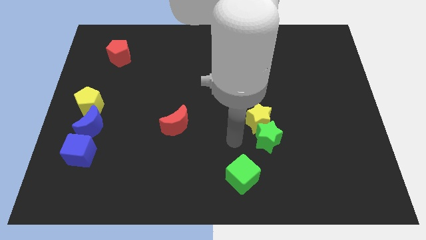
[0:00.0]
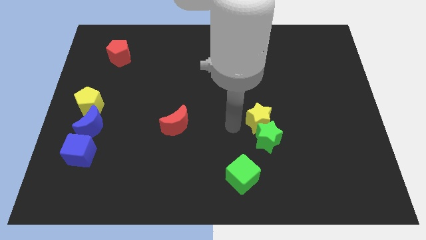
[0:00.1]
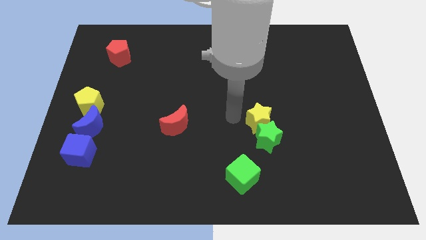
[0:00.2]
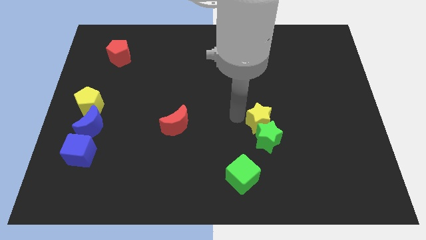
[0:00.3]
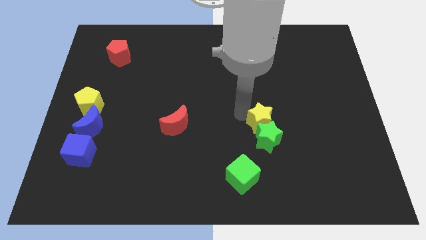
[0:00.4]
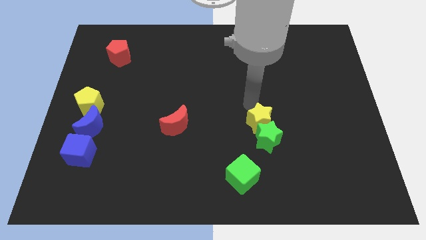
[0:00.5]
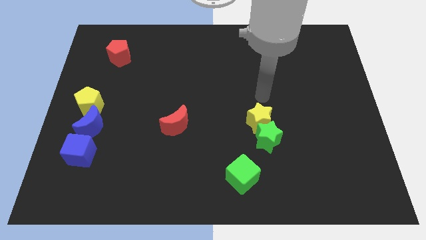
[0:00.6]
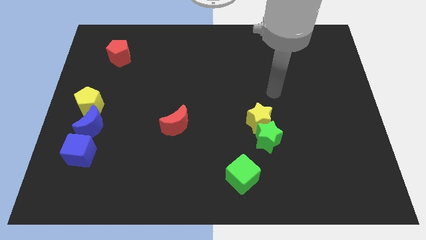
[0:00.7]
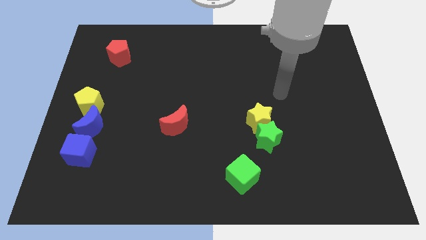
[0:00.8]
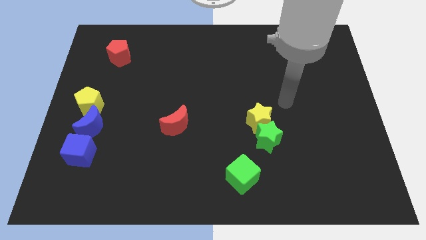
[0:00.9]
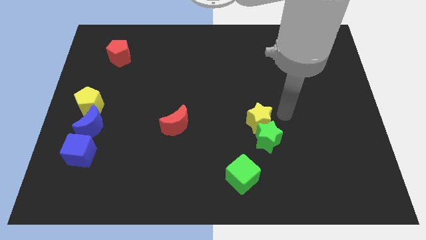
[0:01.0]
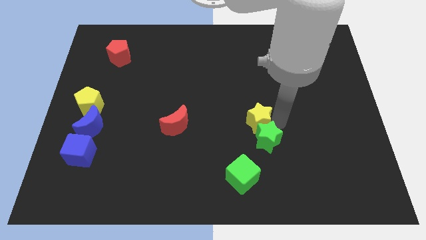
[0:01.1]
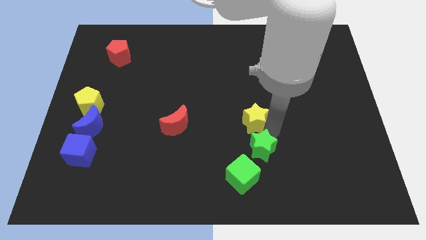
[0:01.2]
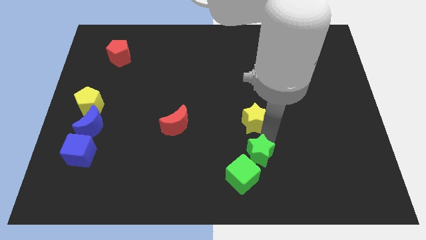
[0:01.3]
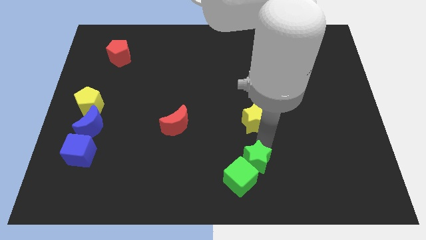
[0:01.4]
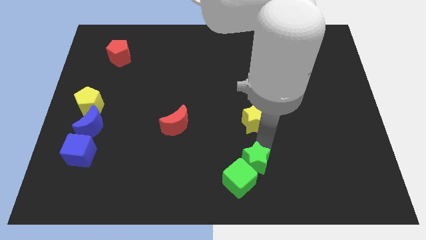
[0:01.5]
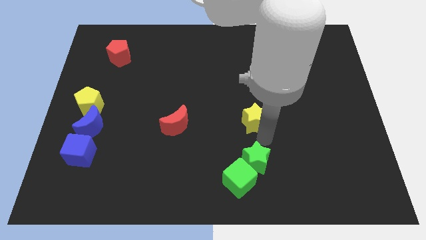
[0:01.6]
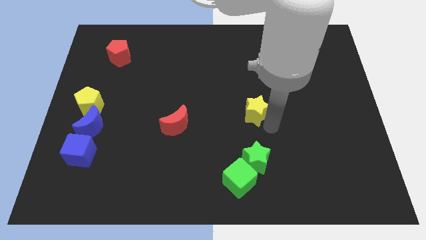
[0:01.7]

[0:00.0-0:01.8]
push green star into the green cube

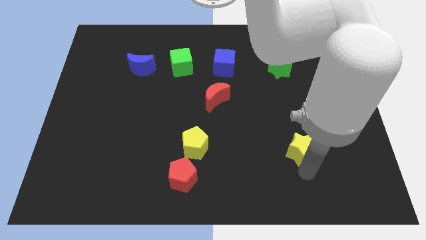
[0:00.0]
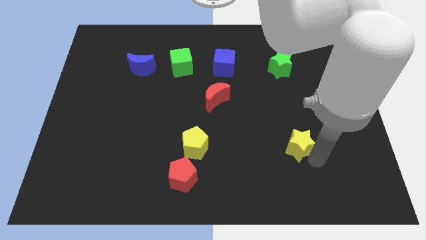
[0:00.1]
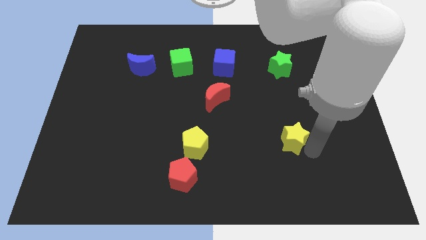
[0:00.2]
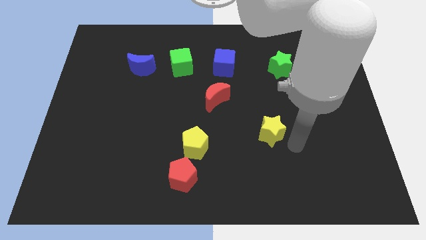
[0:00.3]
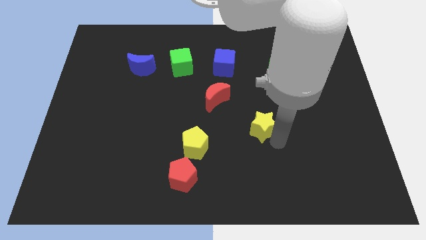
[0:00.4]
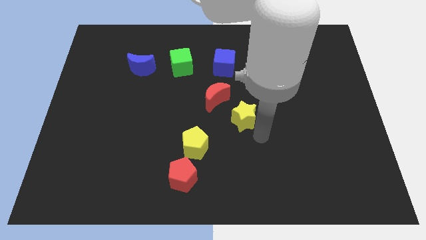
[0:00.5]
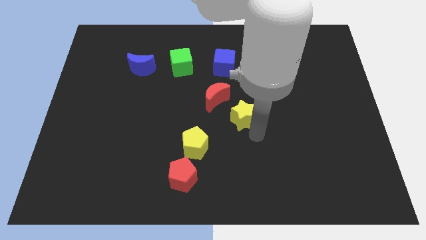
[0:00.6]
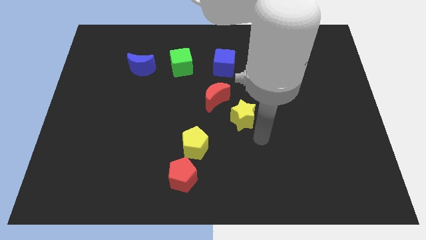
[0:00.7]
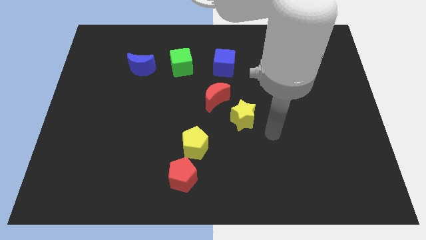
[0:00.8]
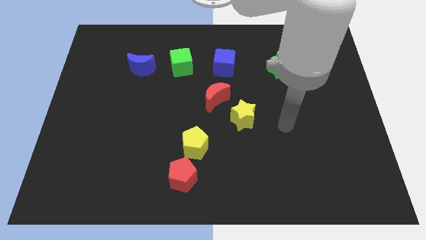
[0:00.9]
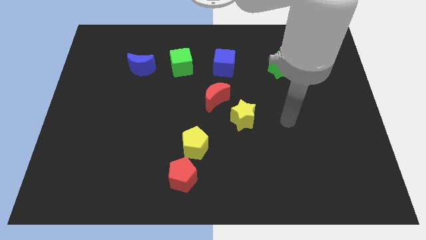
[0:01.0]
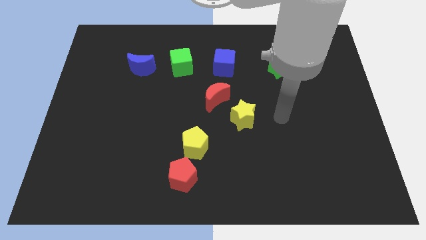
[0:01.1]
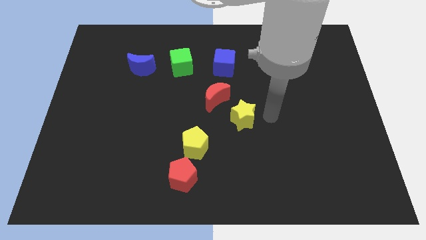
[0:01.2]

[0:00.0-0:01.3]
push yellow star towards red crescent

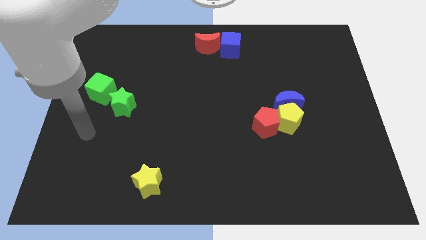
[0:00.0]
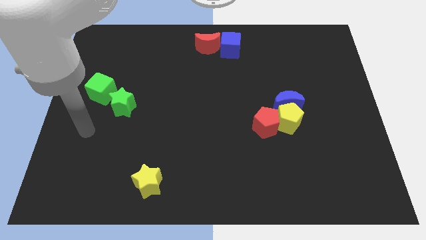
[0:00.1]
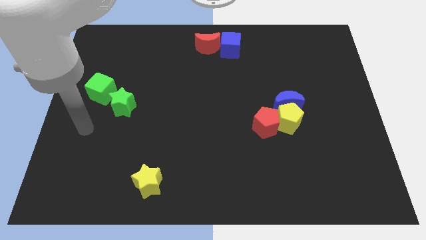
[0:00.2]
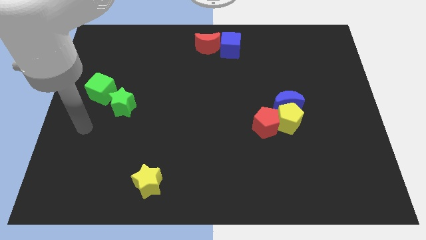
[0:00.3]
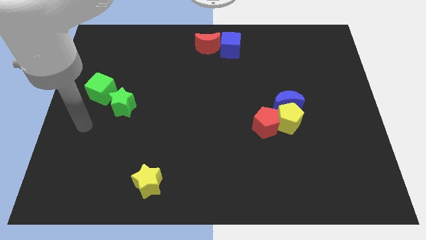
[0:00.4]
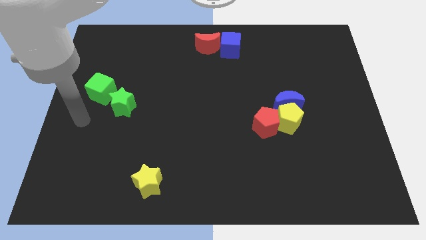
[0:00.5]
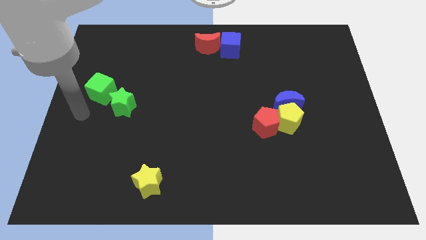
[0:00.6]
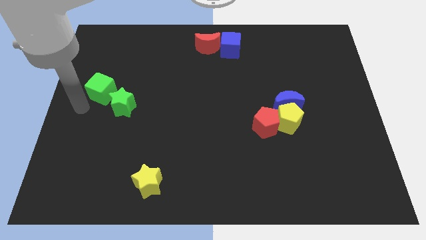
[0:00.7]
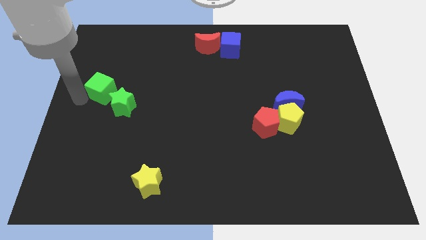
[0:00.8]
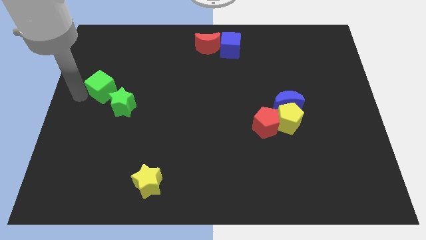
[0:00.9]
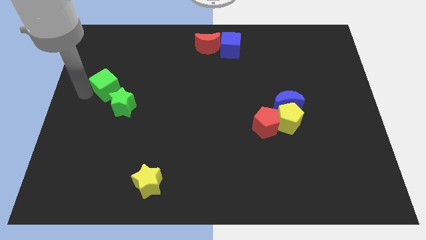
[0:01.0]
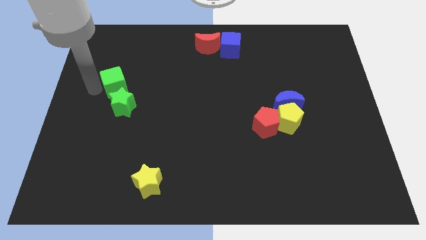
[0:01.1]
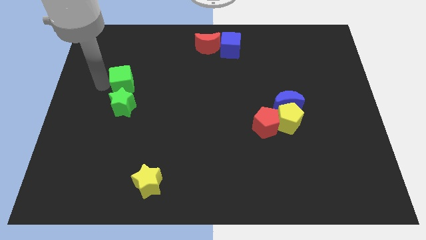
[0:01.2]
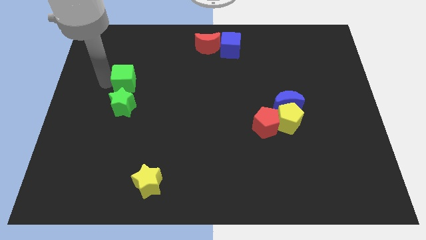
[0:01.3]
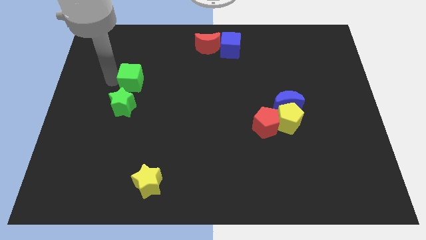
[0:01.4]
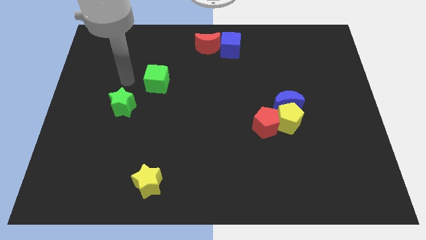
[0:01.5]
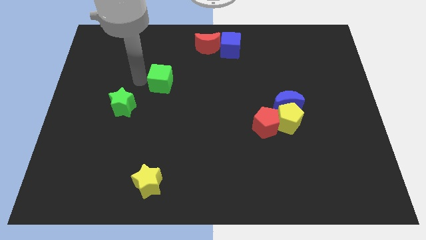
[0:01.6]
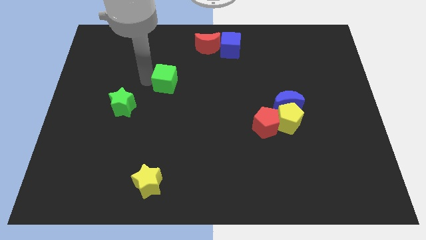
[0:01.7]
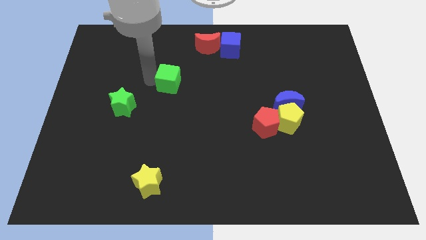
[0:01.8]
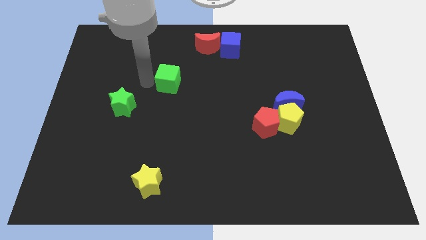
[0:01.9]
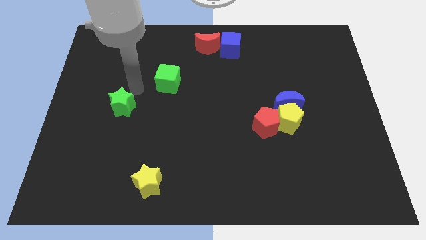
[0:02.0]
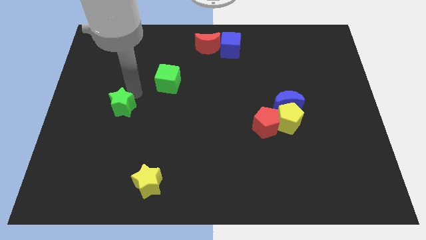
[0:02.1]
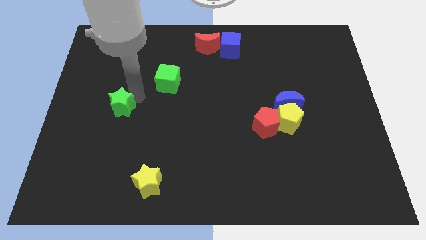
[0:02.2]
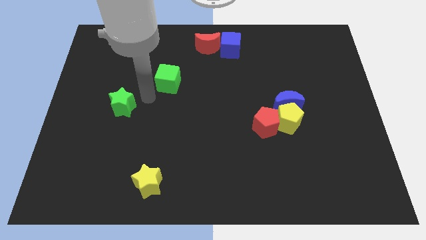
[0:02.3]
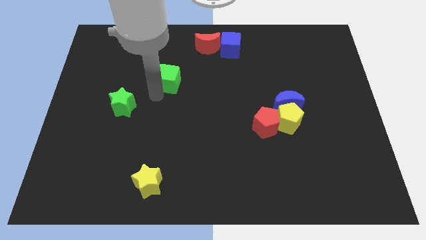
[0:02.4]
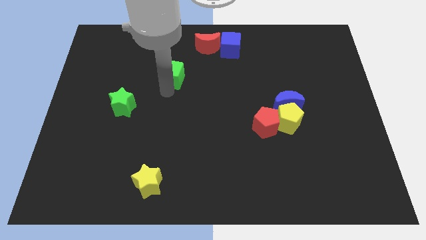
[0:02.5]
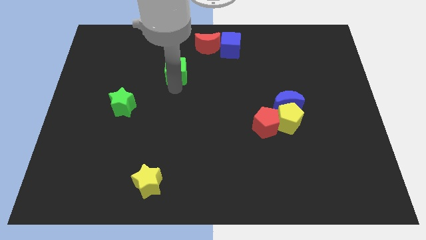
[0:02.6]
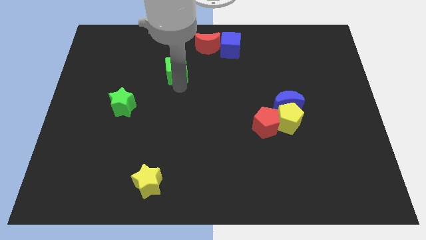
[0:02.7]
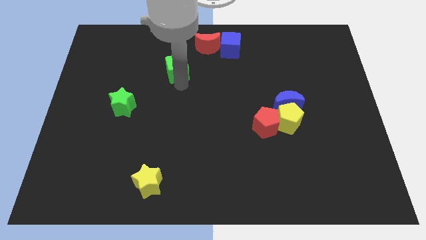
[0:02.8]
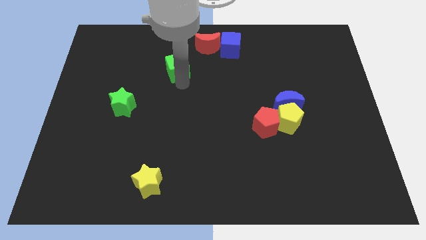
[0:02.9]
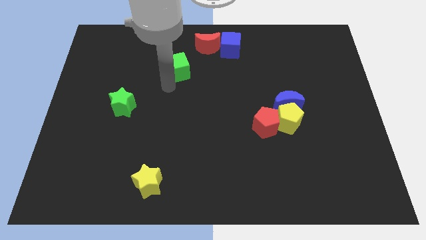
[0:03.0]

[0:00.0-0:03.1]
place green cube diagonal to green star

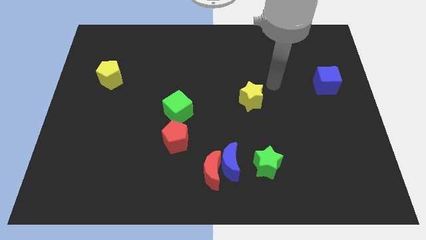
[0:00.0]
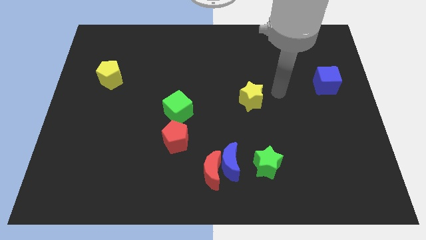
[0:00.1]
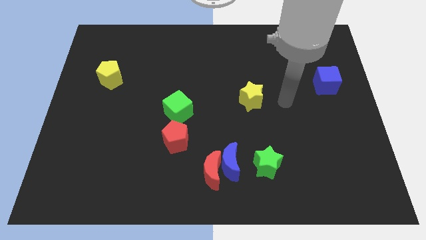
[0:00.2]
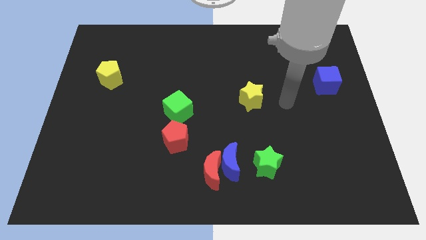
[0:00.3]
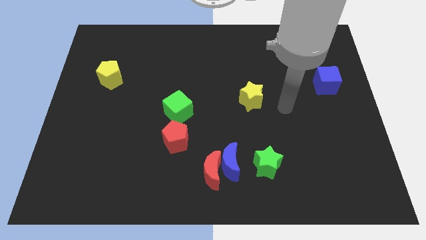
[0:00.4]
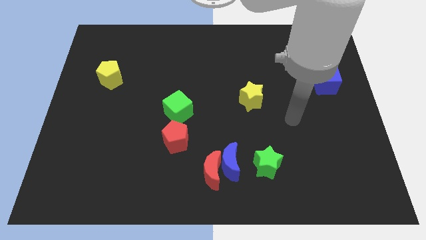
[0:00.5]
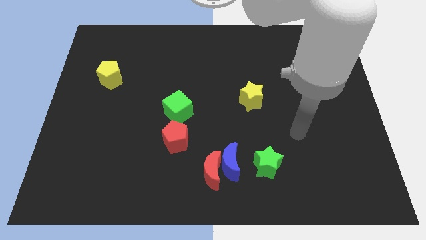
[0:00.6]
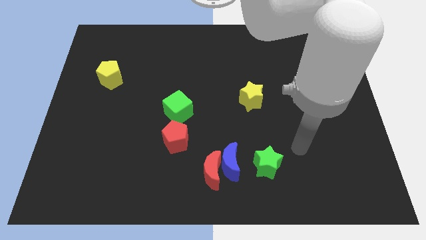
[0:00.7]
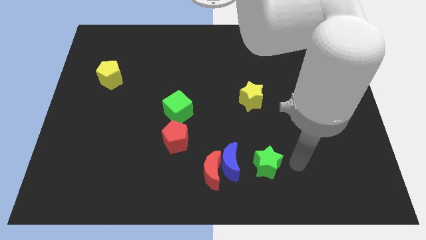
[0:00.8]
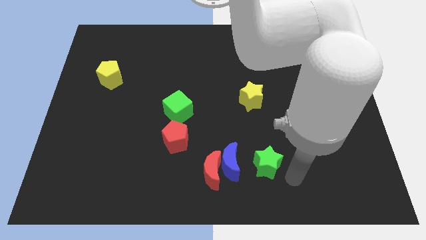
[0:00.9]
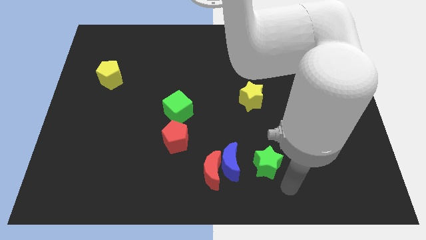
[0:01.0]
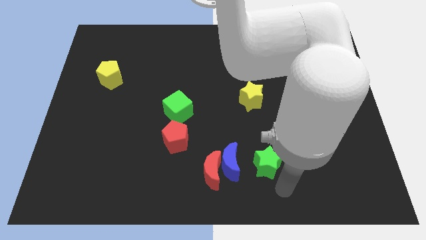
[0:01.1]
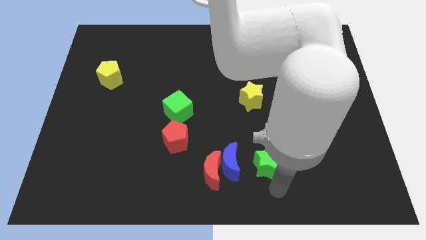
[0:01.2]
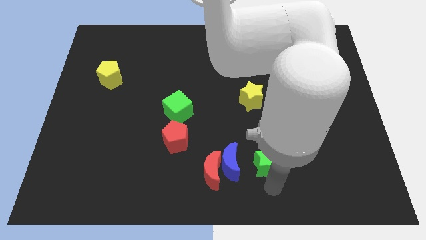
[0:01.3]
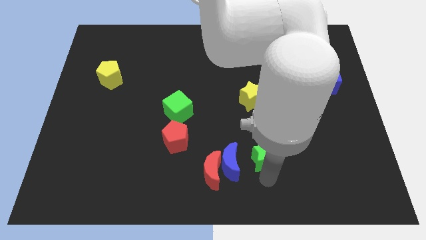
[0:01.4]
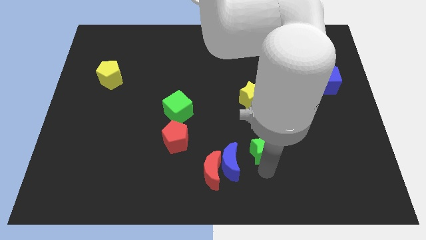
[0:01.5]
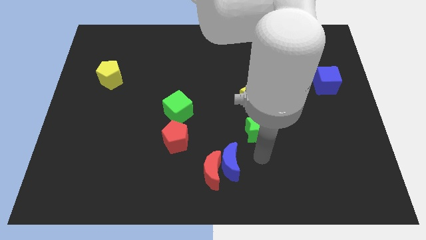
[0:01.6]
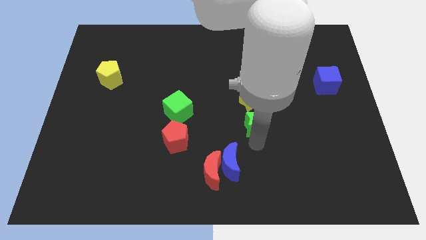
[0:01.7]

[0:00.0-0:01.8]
push the green star towards the bottom side of the yellow star

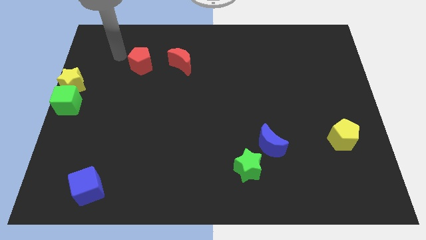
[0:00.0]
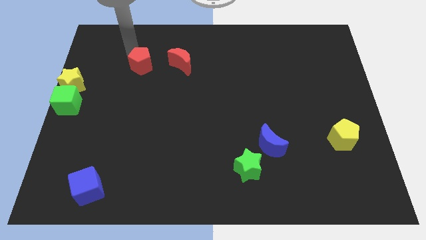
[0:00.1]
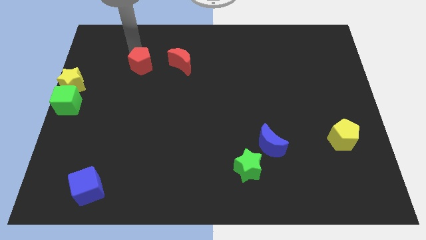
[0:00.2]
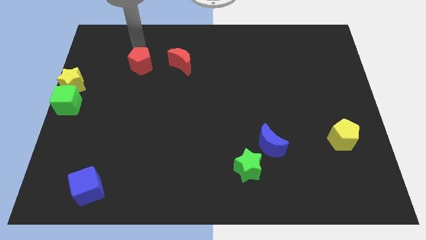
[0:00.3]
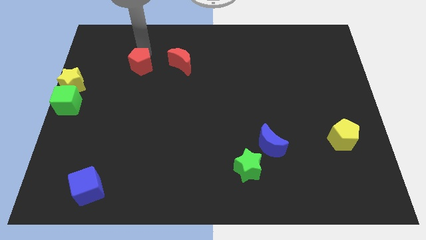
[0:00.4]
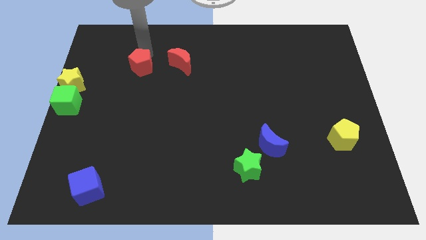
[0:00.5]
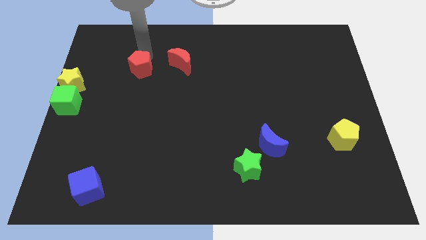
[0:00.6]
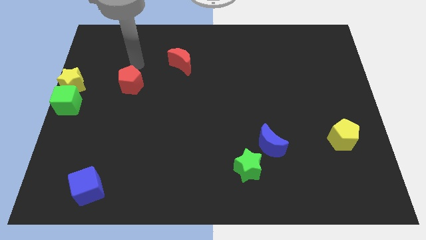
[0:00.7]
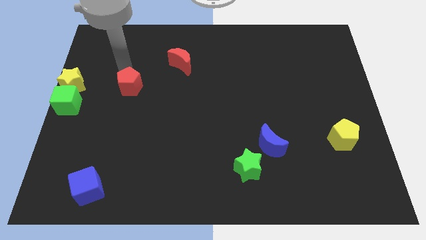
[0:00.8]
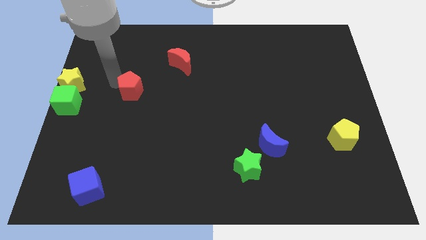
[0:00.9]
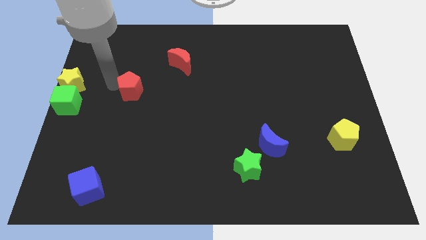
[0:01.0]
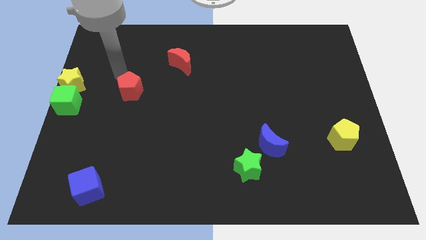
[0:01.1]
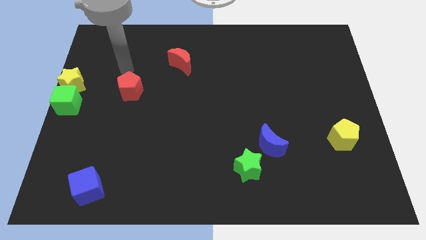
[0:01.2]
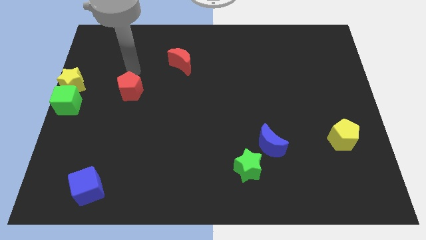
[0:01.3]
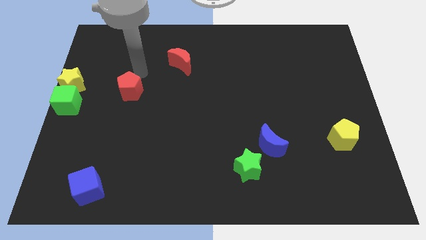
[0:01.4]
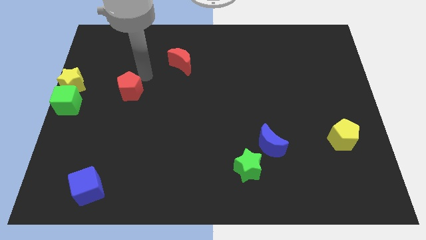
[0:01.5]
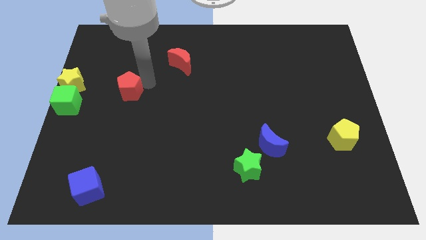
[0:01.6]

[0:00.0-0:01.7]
move the red pentagon slightly down
